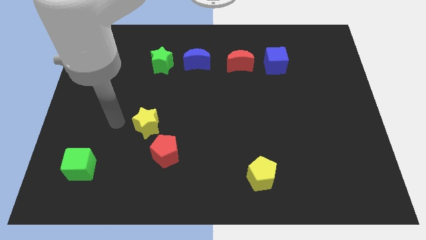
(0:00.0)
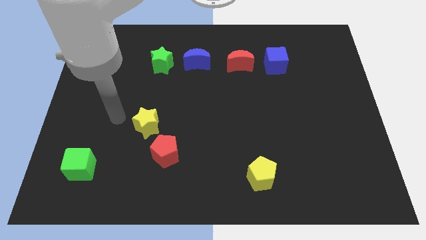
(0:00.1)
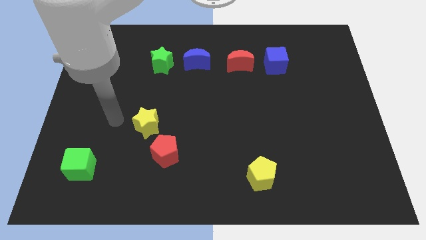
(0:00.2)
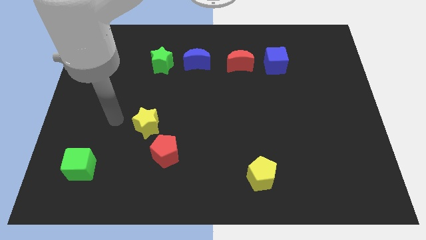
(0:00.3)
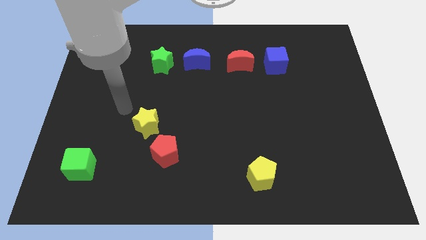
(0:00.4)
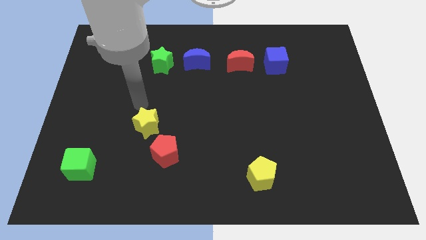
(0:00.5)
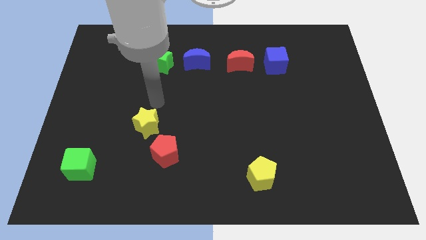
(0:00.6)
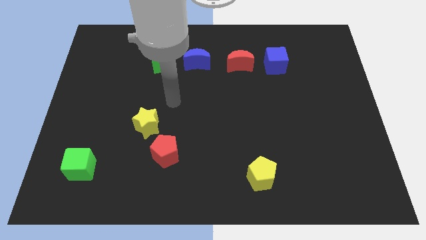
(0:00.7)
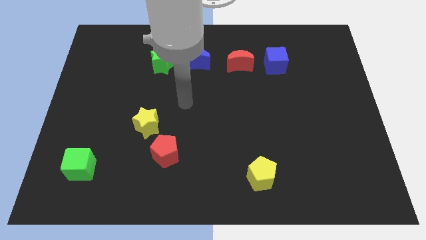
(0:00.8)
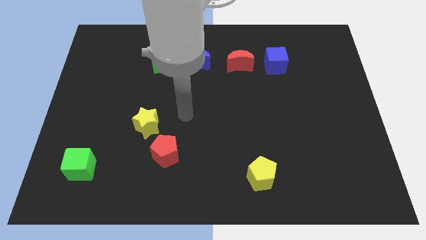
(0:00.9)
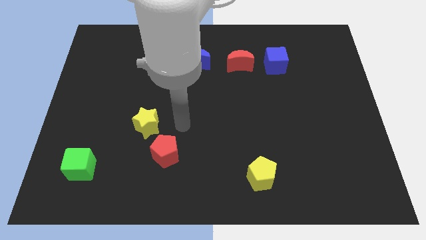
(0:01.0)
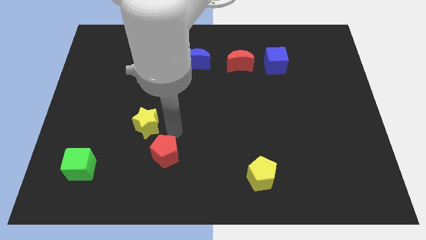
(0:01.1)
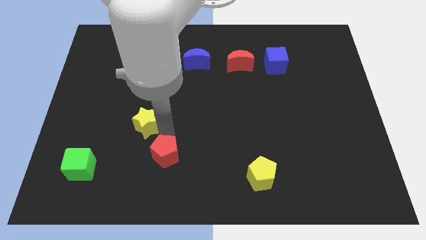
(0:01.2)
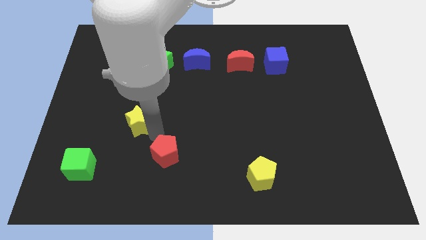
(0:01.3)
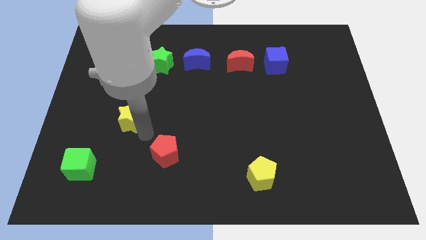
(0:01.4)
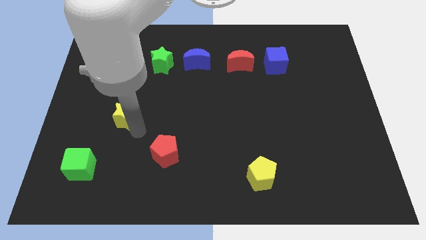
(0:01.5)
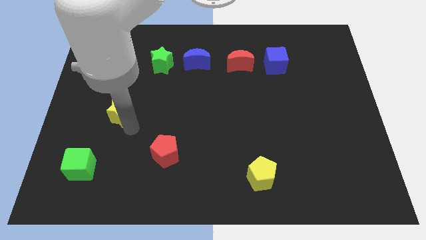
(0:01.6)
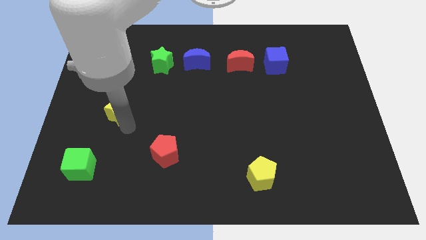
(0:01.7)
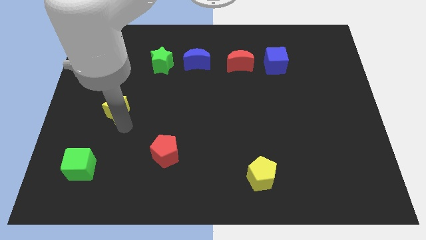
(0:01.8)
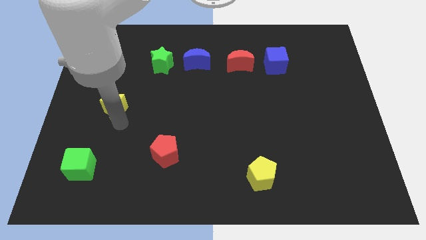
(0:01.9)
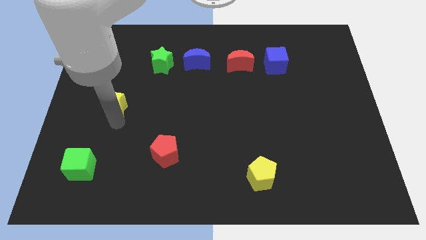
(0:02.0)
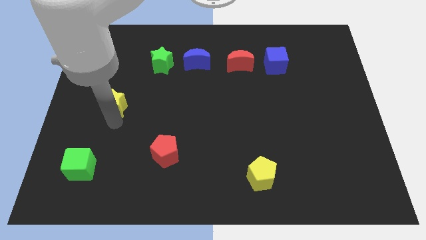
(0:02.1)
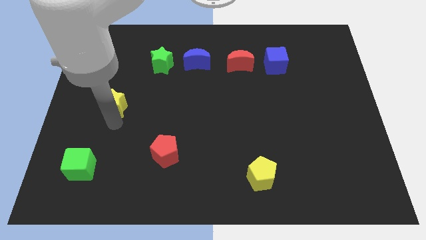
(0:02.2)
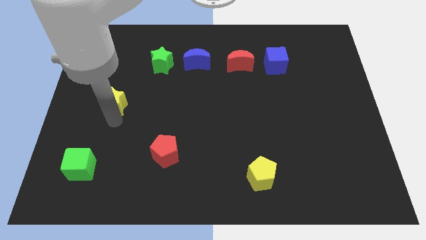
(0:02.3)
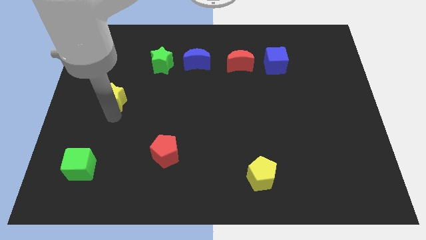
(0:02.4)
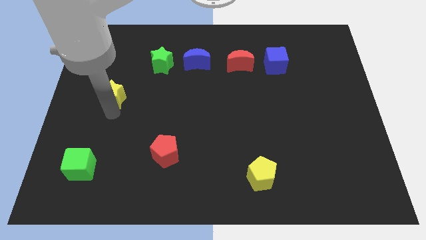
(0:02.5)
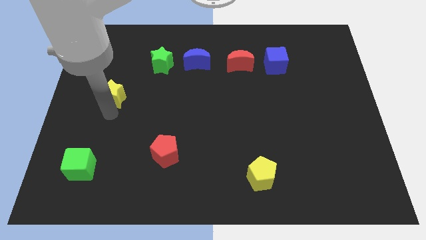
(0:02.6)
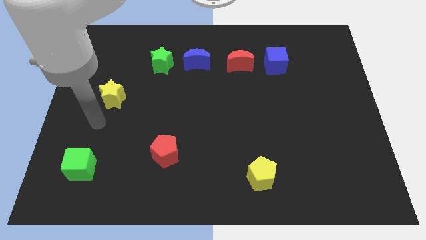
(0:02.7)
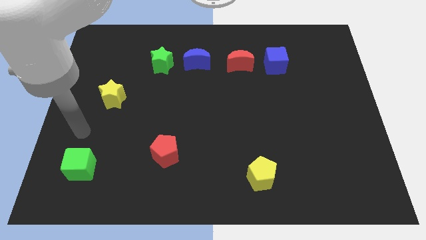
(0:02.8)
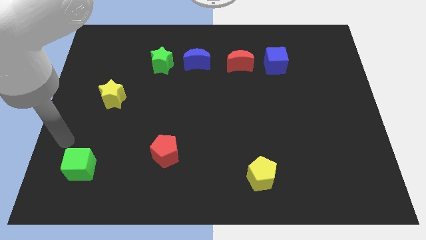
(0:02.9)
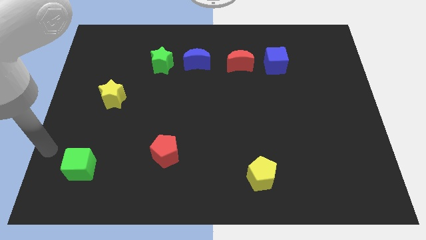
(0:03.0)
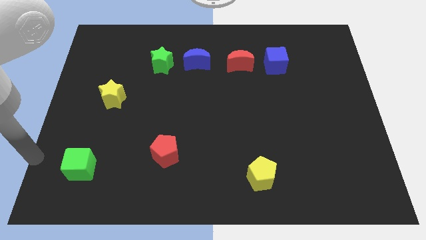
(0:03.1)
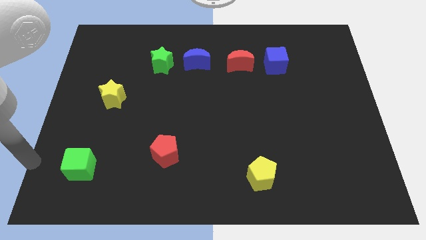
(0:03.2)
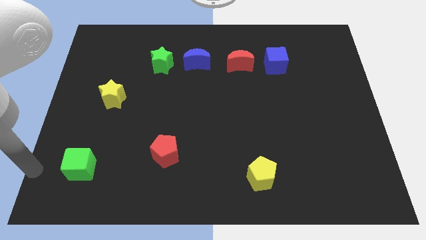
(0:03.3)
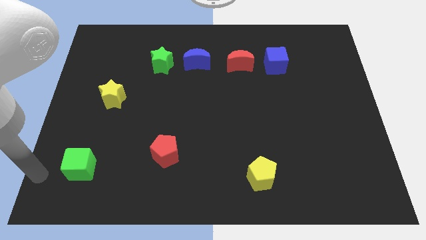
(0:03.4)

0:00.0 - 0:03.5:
move the yellow star to the left center of the board

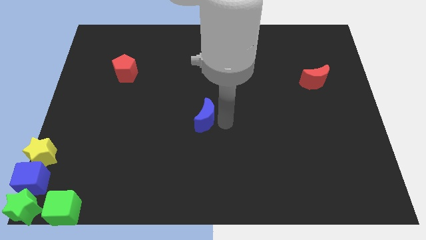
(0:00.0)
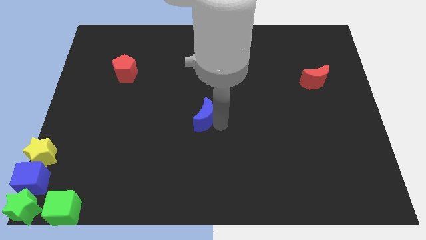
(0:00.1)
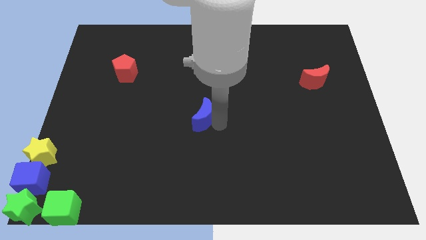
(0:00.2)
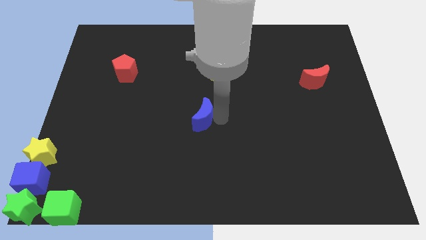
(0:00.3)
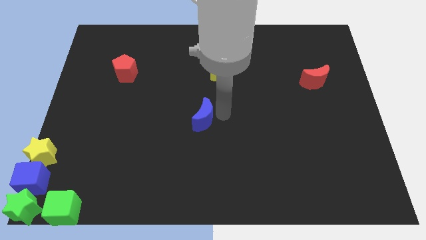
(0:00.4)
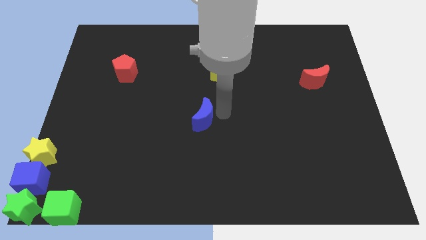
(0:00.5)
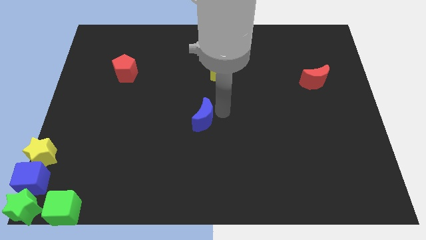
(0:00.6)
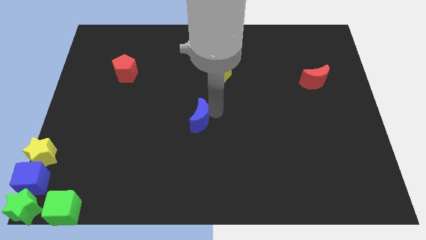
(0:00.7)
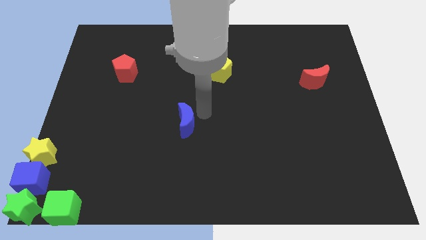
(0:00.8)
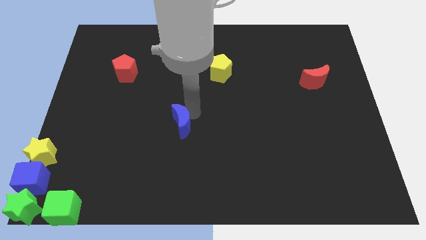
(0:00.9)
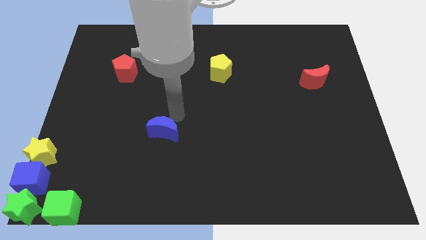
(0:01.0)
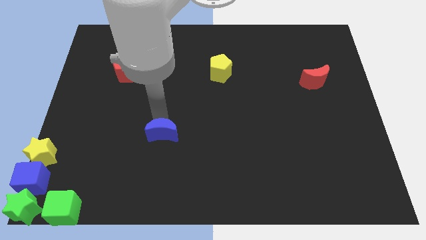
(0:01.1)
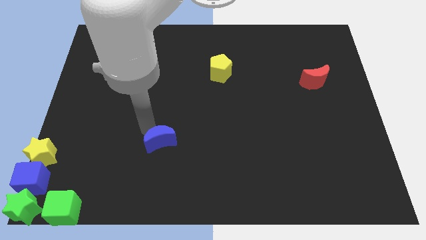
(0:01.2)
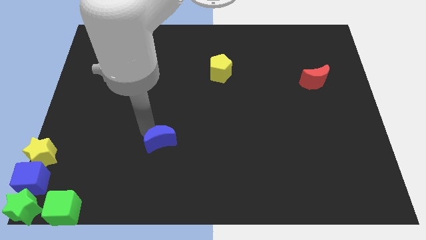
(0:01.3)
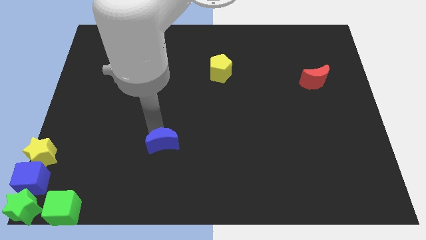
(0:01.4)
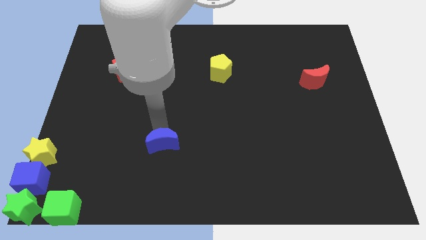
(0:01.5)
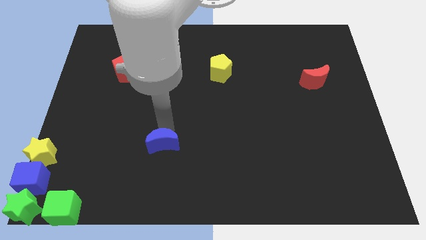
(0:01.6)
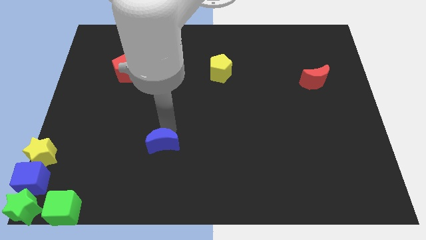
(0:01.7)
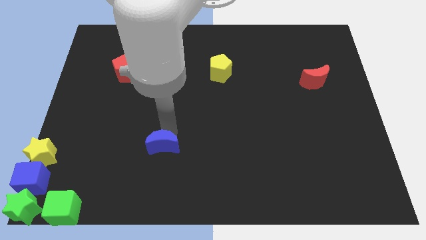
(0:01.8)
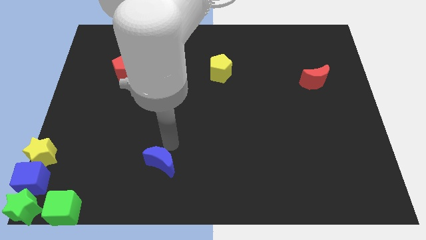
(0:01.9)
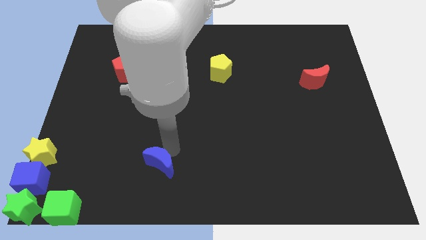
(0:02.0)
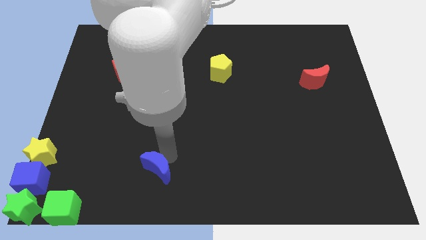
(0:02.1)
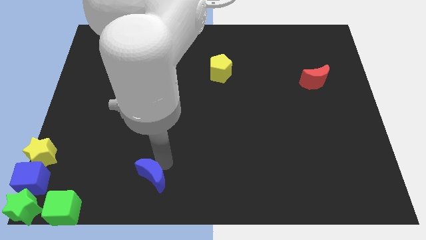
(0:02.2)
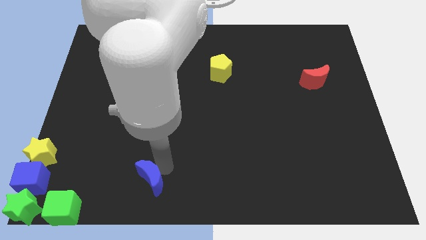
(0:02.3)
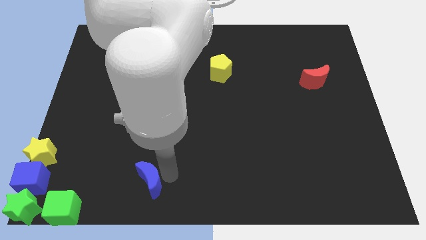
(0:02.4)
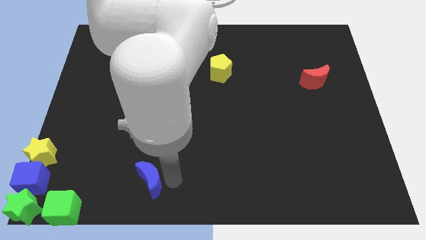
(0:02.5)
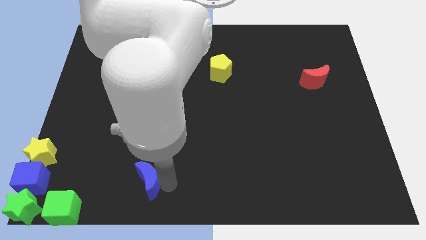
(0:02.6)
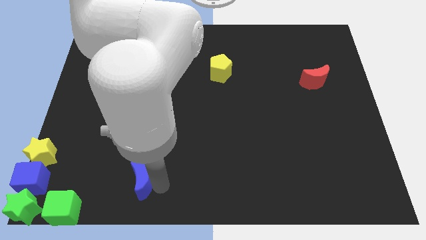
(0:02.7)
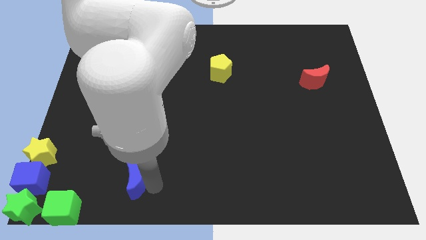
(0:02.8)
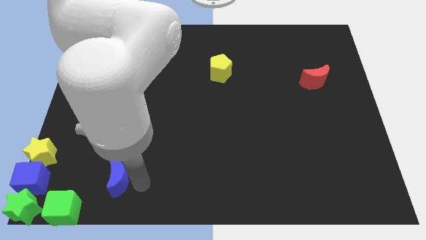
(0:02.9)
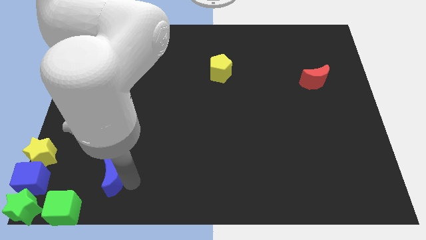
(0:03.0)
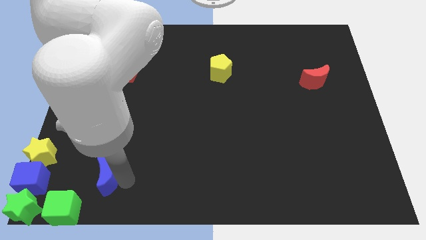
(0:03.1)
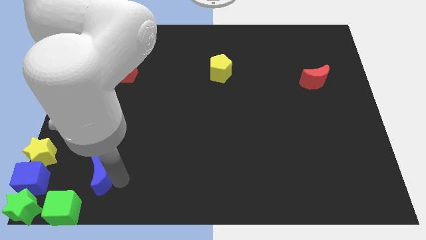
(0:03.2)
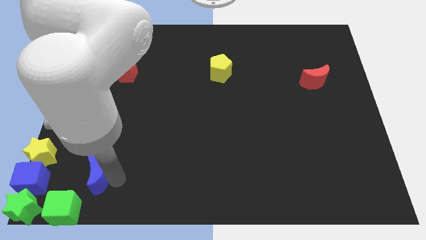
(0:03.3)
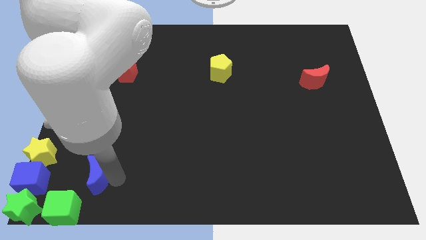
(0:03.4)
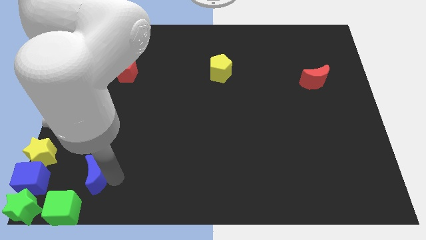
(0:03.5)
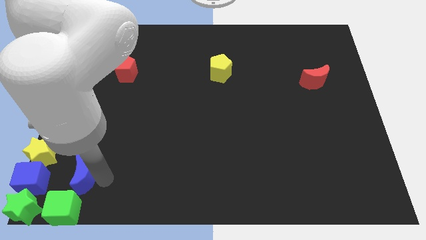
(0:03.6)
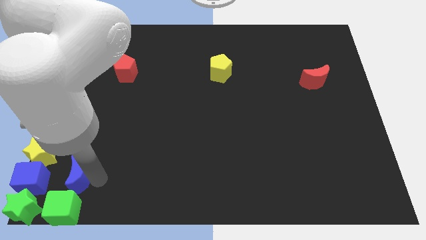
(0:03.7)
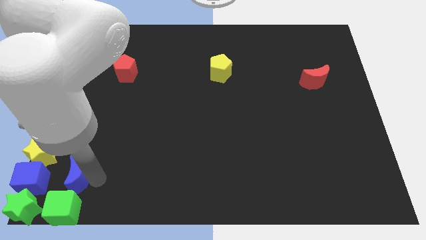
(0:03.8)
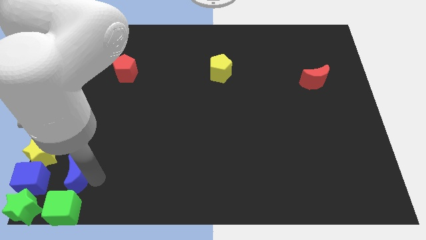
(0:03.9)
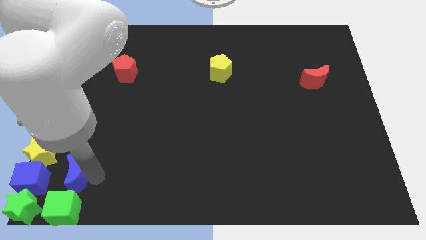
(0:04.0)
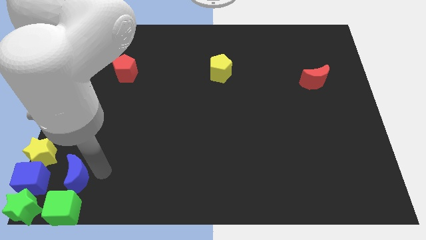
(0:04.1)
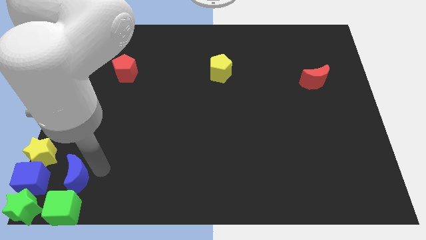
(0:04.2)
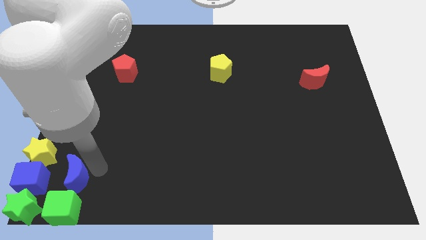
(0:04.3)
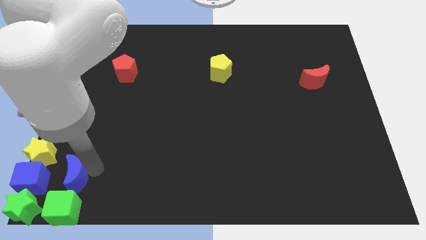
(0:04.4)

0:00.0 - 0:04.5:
move blue half moon to bottom left of the board

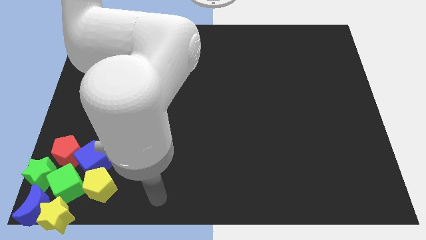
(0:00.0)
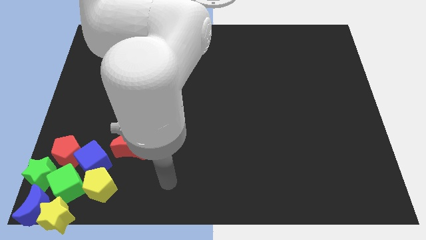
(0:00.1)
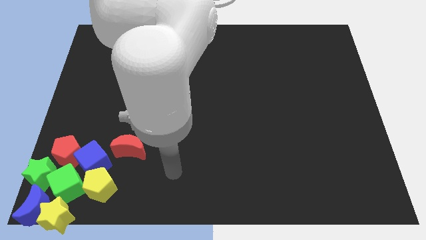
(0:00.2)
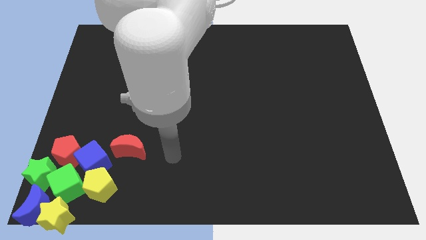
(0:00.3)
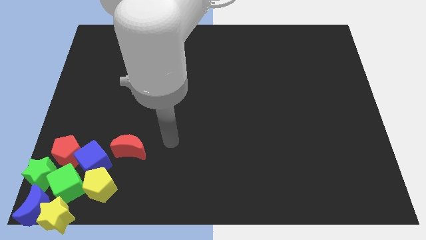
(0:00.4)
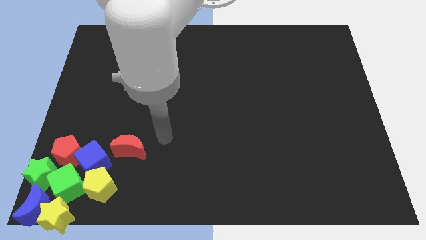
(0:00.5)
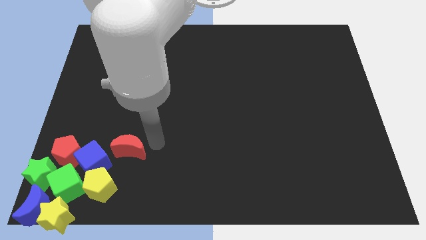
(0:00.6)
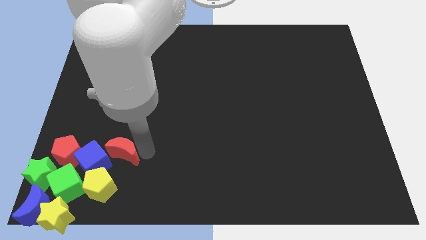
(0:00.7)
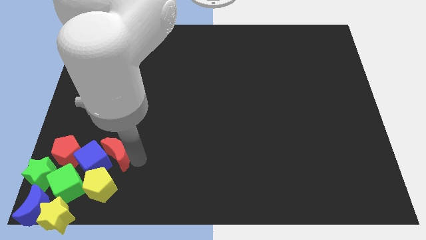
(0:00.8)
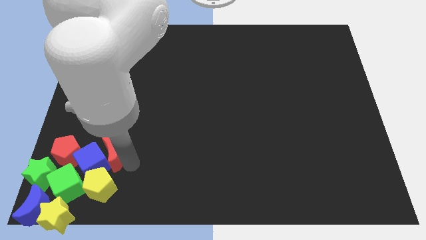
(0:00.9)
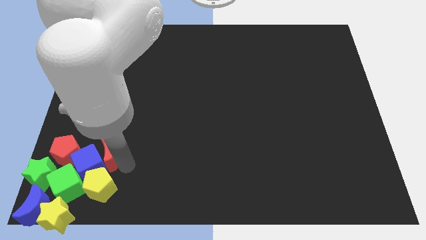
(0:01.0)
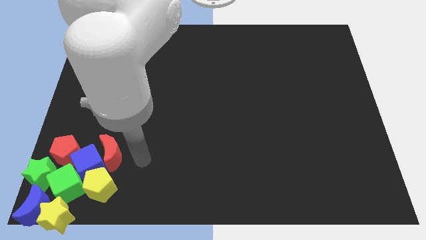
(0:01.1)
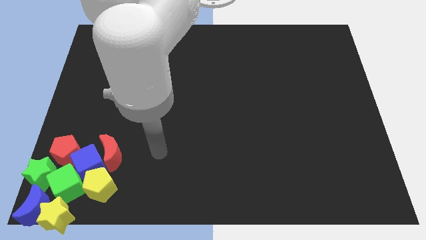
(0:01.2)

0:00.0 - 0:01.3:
push the red crescent into the blue cube
